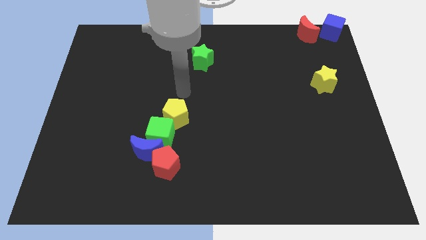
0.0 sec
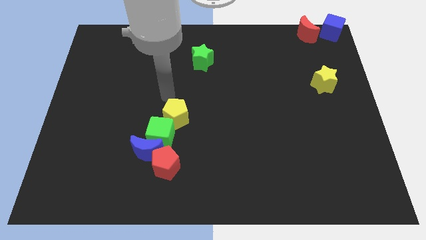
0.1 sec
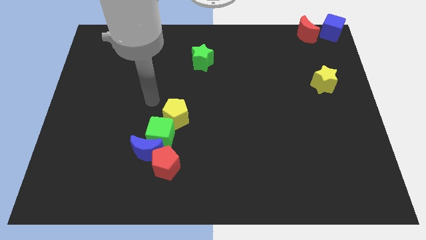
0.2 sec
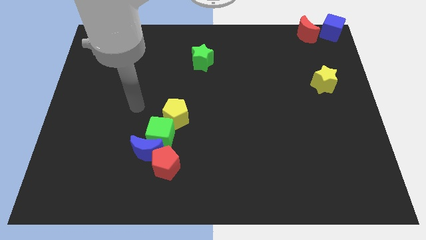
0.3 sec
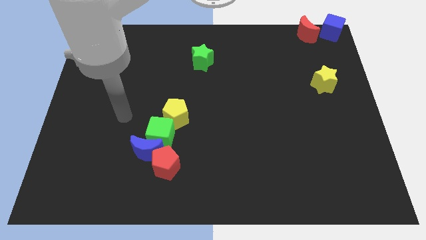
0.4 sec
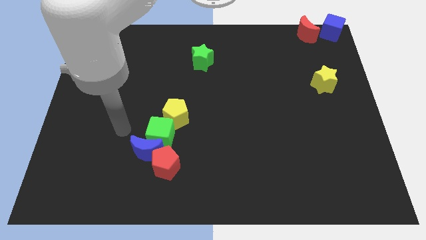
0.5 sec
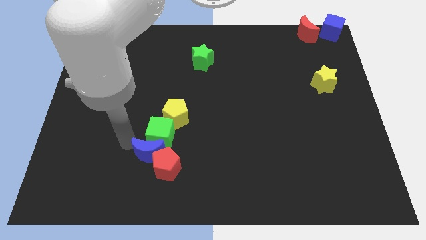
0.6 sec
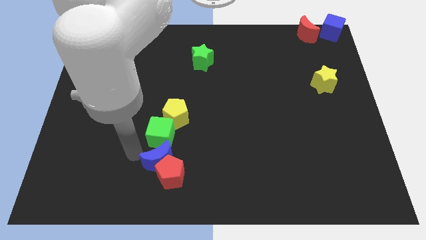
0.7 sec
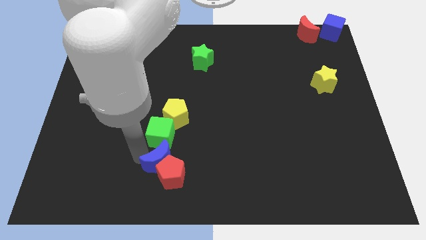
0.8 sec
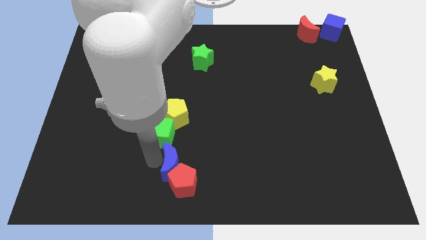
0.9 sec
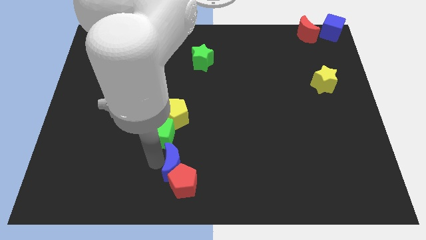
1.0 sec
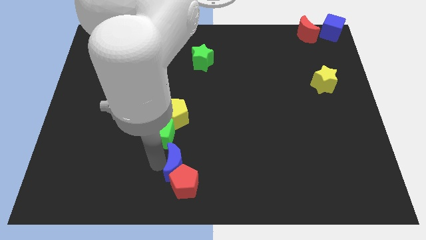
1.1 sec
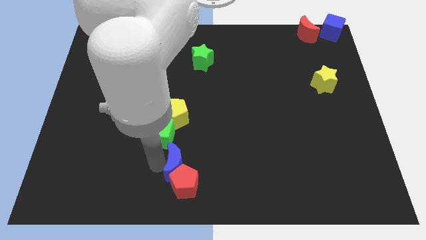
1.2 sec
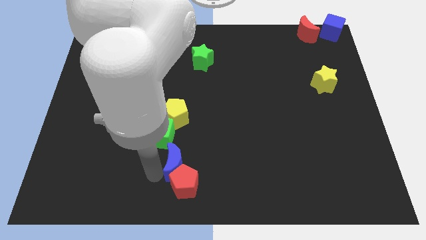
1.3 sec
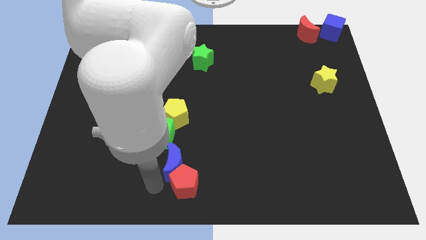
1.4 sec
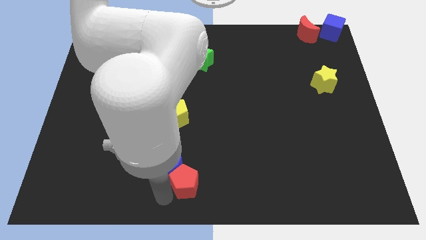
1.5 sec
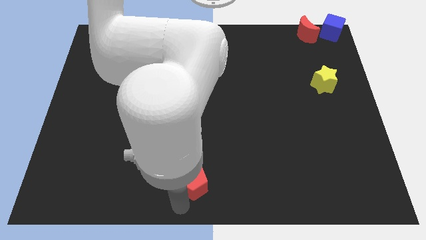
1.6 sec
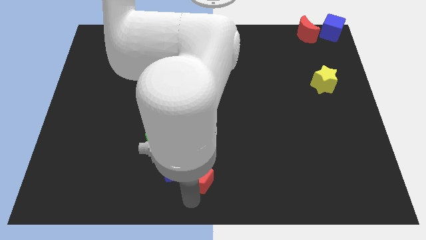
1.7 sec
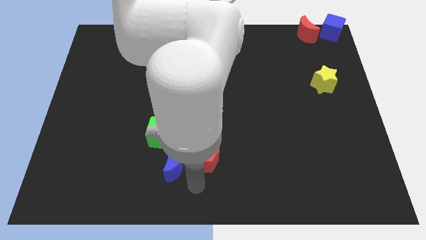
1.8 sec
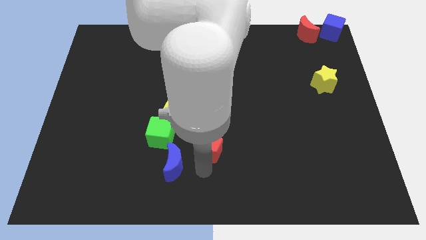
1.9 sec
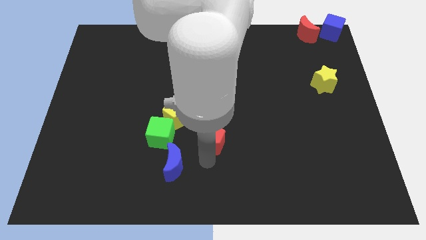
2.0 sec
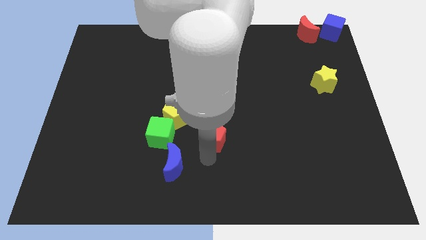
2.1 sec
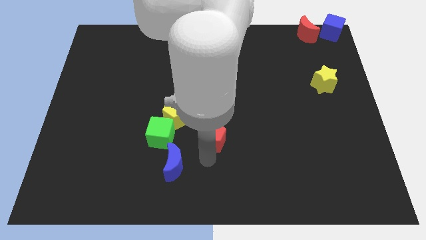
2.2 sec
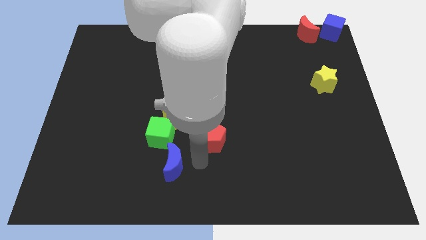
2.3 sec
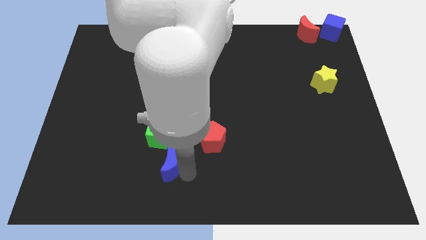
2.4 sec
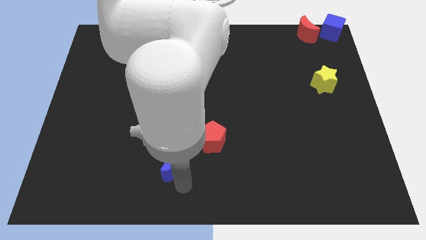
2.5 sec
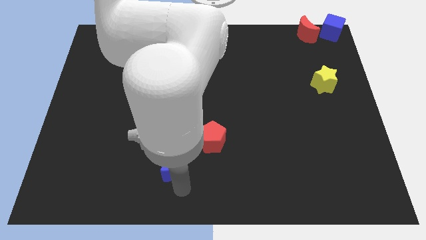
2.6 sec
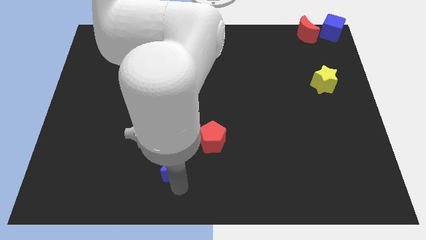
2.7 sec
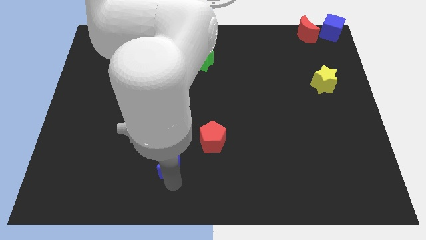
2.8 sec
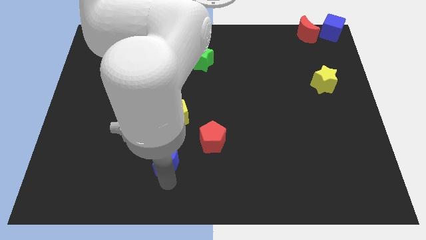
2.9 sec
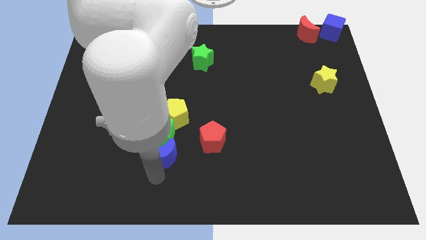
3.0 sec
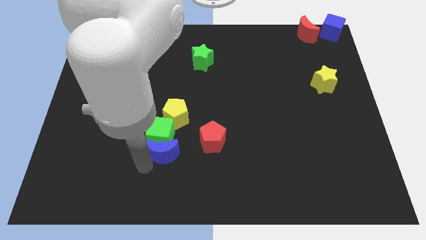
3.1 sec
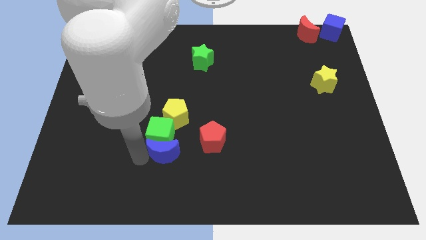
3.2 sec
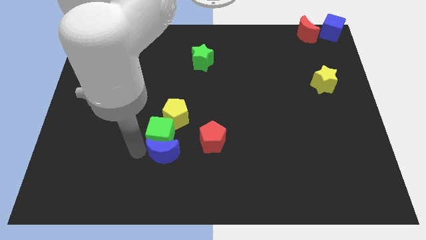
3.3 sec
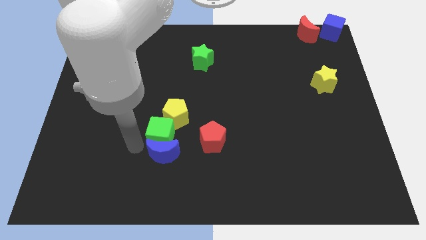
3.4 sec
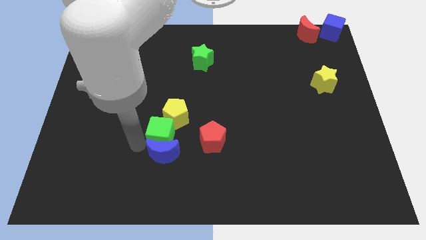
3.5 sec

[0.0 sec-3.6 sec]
push the red pentagon and blue moon diagonal to each other

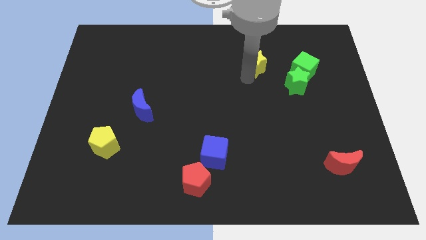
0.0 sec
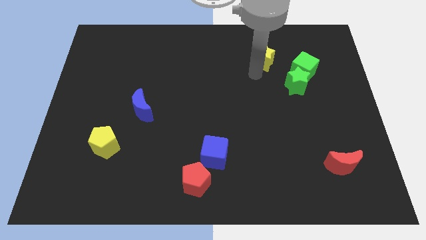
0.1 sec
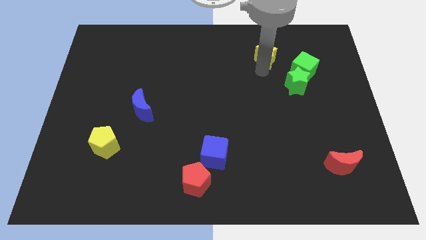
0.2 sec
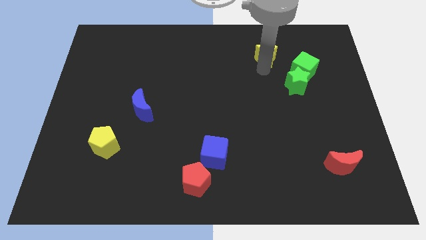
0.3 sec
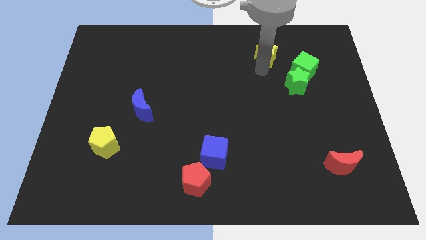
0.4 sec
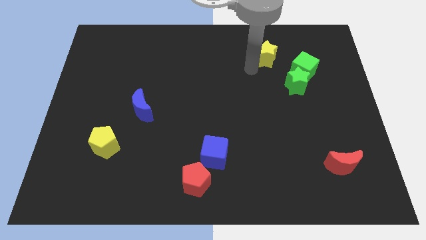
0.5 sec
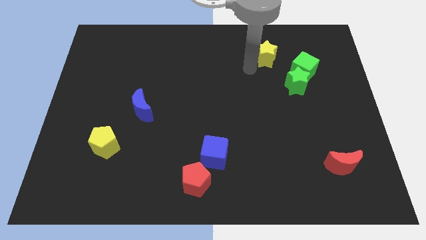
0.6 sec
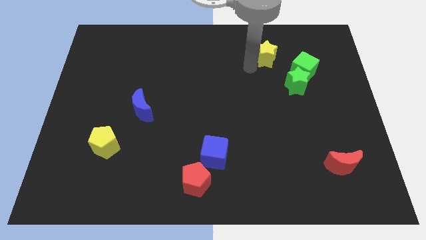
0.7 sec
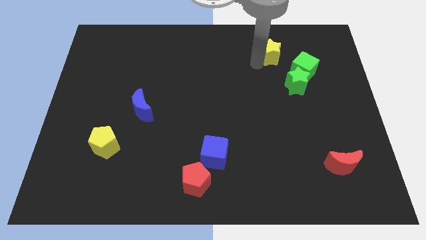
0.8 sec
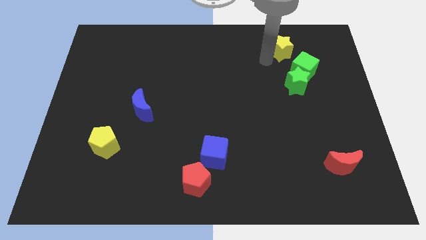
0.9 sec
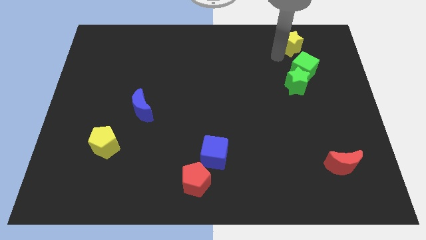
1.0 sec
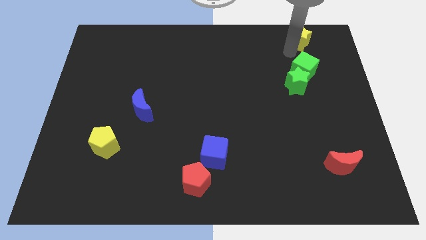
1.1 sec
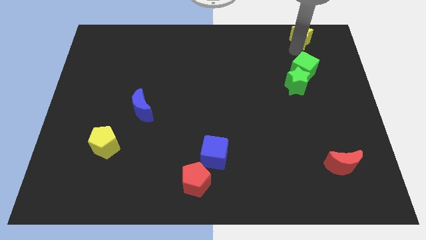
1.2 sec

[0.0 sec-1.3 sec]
put the yellow star above the green cube

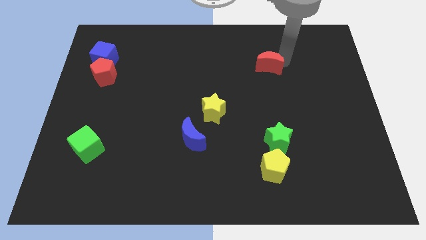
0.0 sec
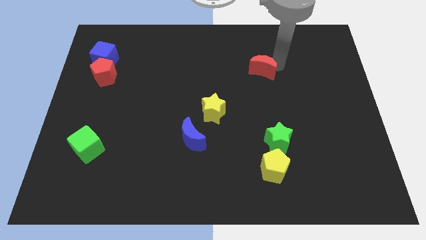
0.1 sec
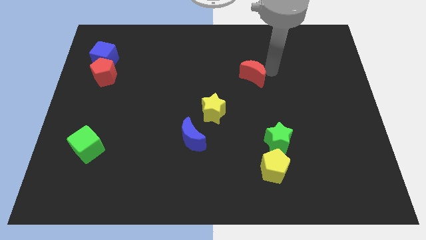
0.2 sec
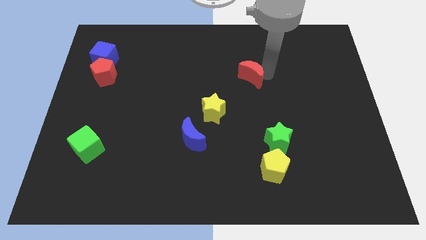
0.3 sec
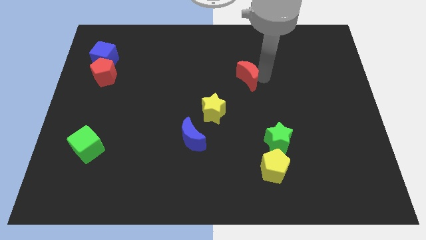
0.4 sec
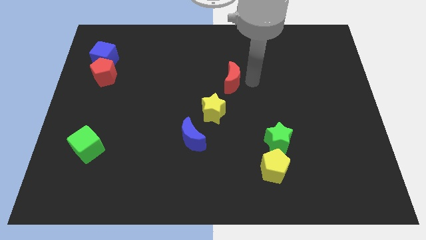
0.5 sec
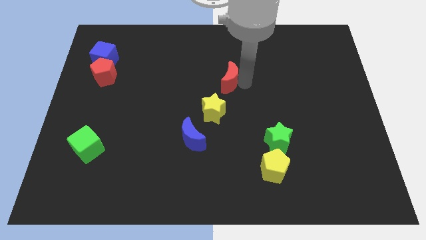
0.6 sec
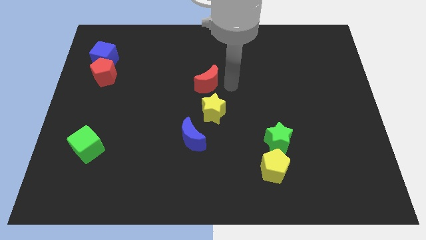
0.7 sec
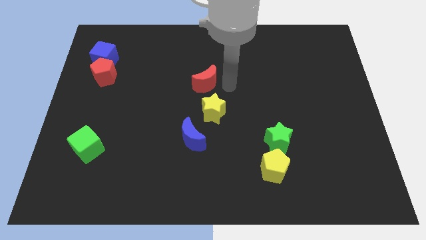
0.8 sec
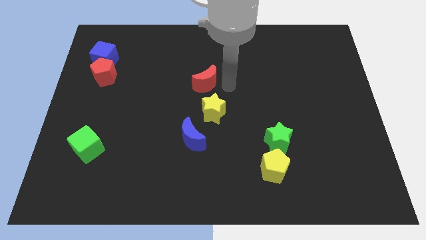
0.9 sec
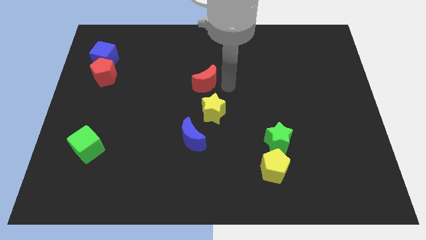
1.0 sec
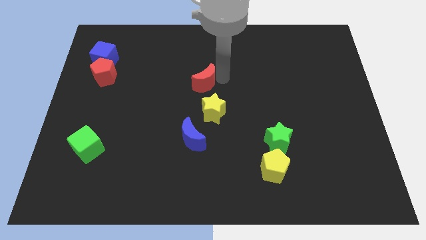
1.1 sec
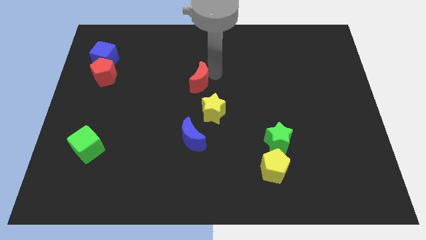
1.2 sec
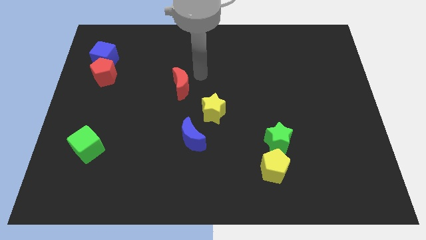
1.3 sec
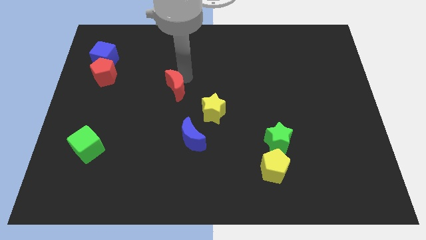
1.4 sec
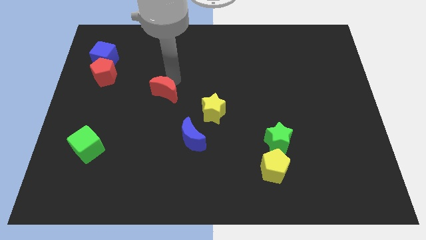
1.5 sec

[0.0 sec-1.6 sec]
push the red crescent to the left side of the yellow star

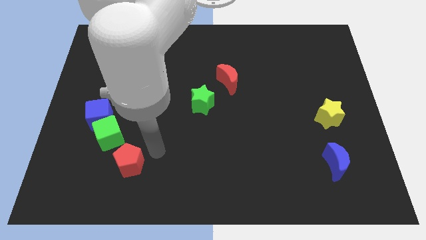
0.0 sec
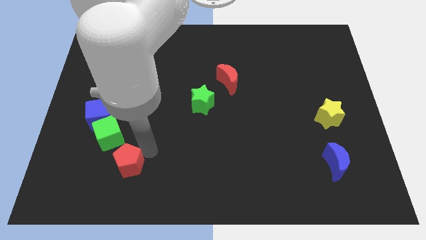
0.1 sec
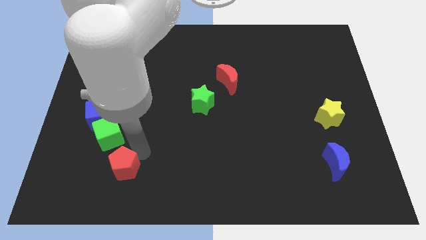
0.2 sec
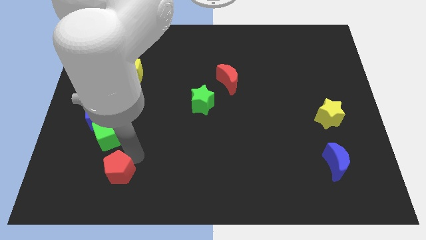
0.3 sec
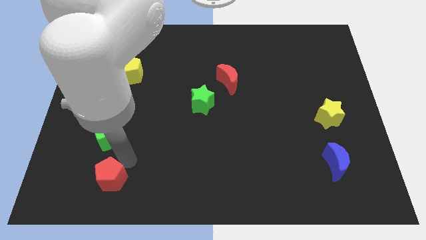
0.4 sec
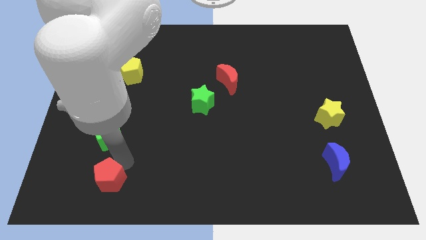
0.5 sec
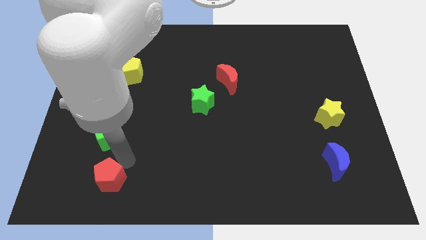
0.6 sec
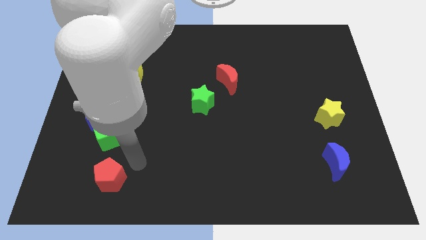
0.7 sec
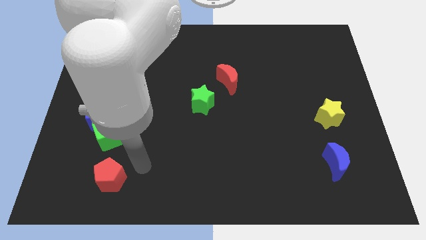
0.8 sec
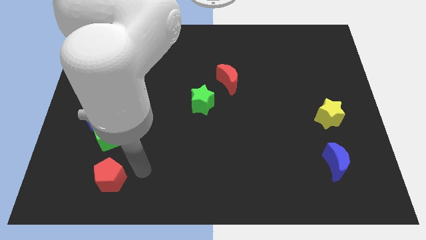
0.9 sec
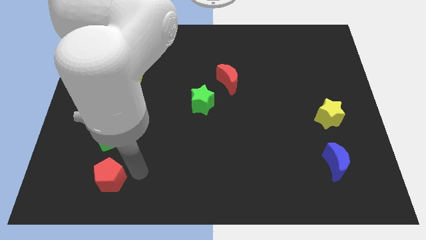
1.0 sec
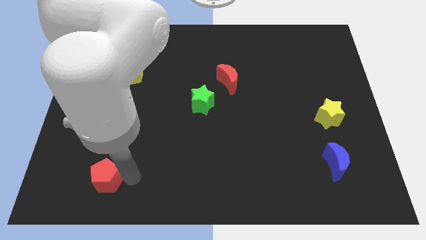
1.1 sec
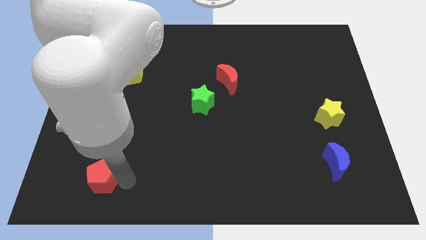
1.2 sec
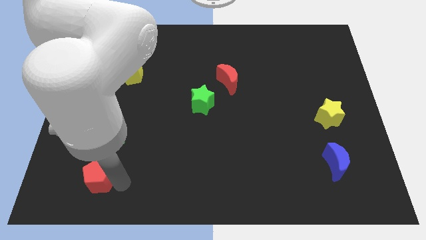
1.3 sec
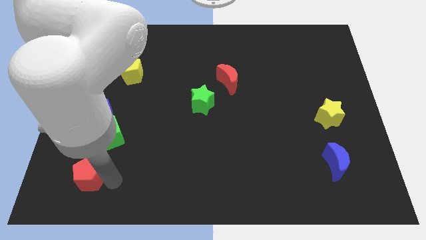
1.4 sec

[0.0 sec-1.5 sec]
place the red pentagon below the blue cube

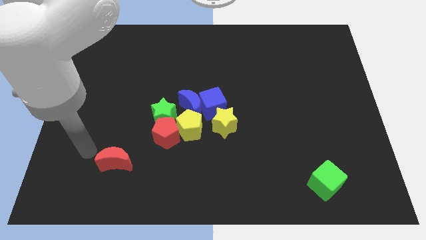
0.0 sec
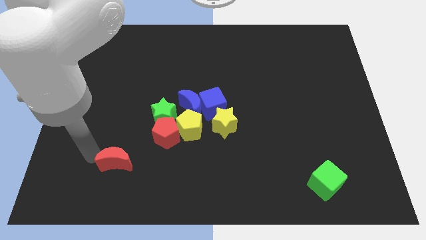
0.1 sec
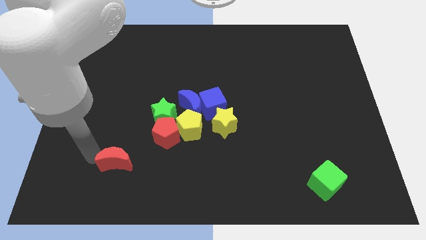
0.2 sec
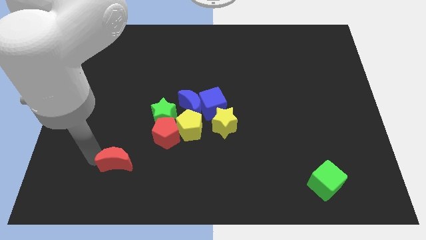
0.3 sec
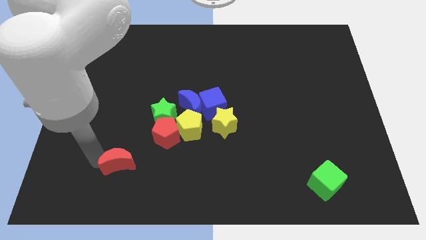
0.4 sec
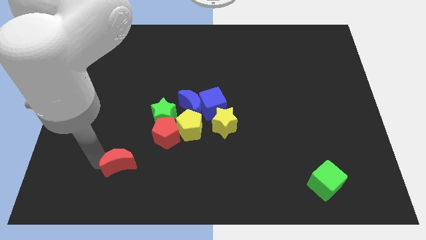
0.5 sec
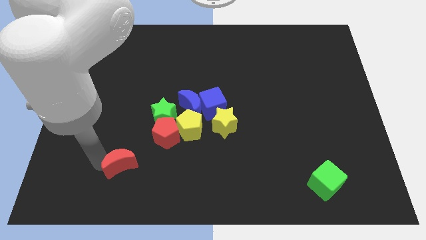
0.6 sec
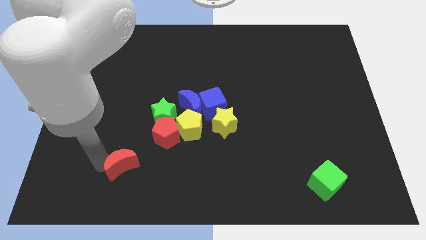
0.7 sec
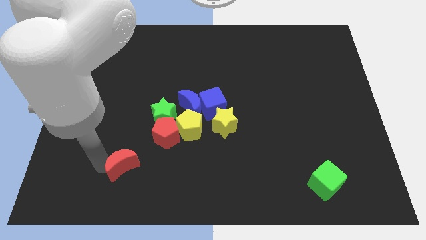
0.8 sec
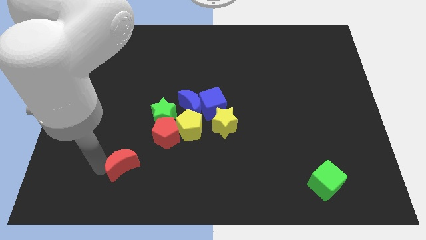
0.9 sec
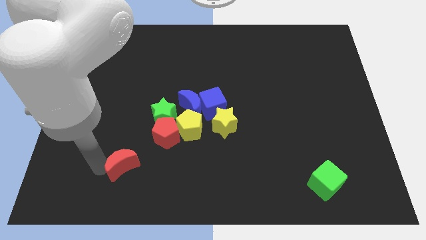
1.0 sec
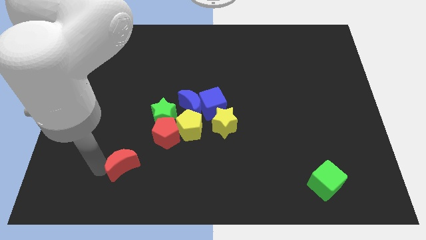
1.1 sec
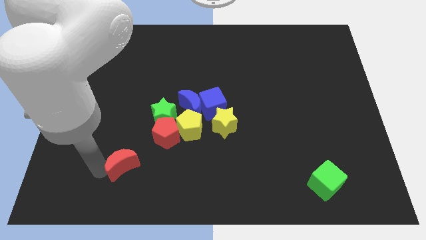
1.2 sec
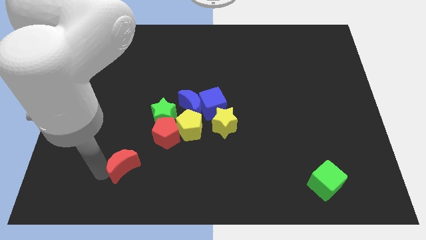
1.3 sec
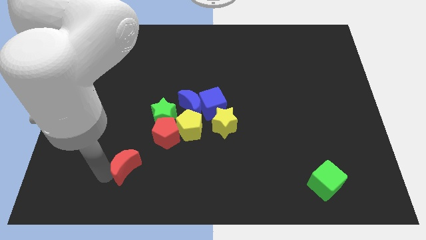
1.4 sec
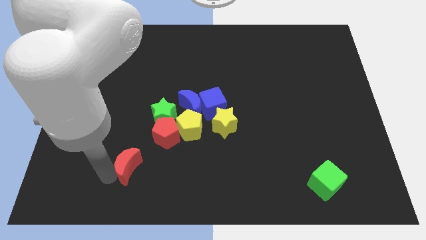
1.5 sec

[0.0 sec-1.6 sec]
push red crescent towards the red pentagon
